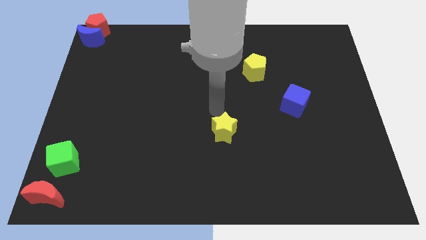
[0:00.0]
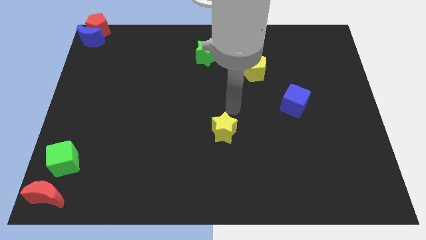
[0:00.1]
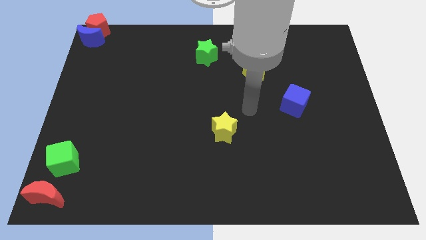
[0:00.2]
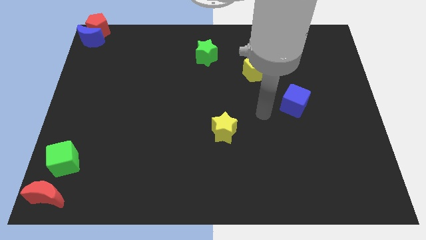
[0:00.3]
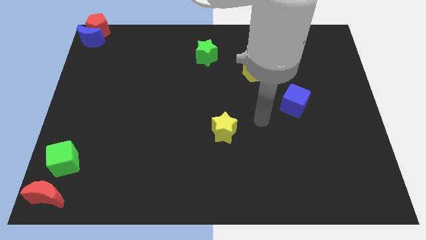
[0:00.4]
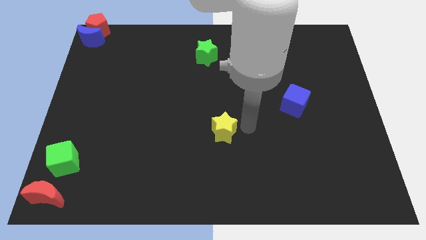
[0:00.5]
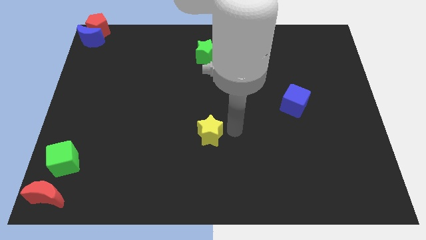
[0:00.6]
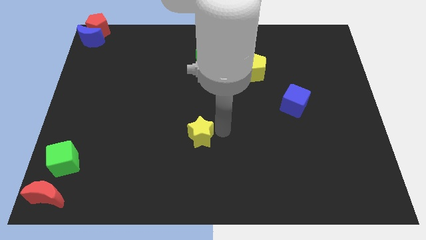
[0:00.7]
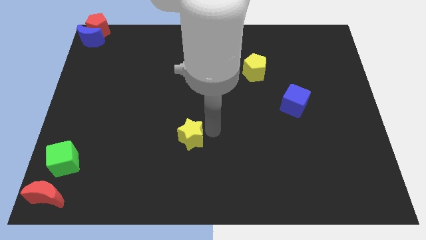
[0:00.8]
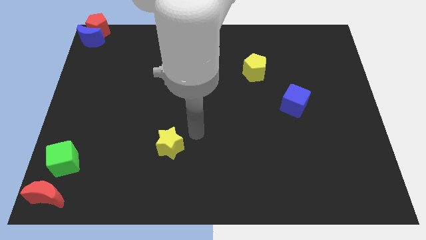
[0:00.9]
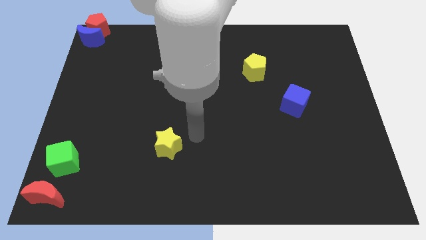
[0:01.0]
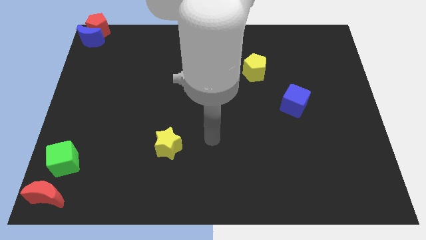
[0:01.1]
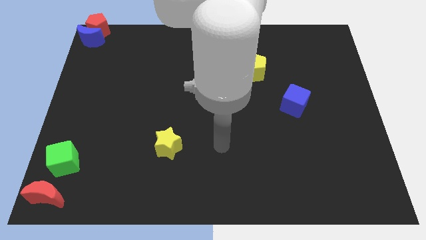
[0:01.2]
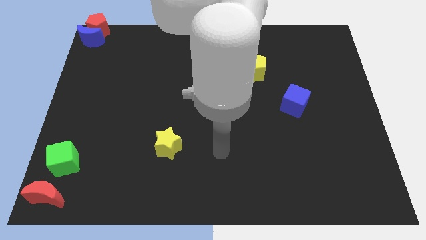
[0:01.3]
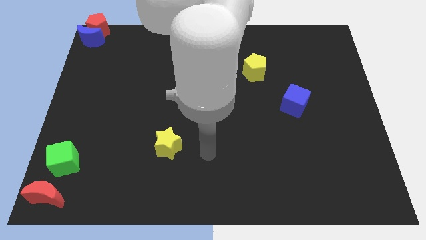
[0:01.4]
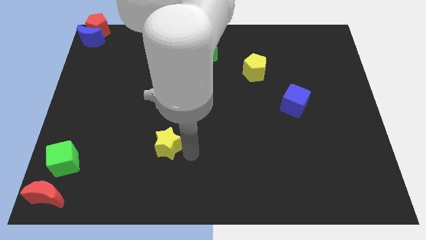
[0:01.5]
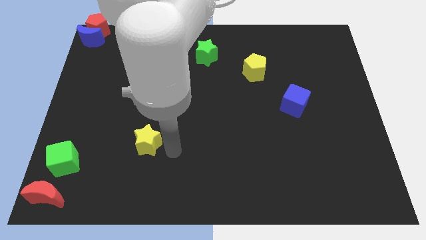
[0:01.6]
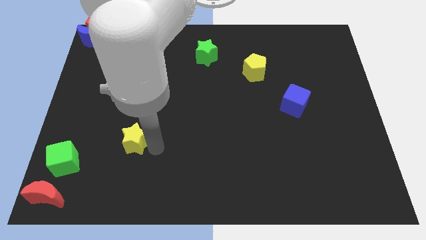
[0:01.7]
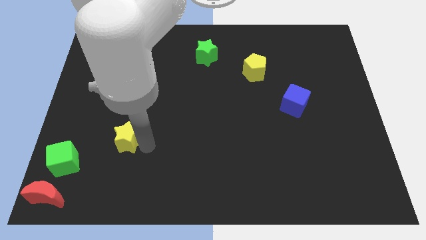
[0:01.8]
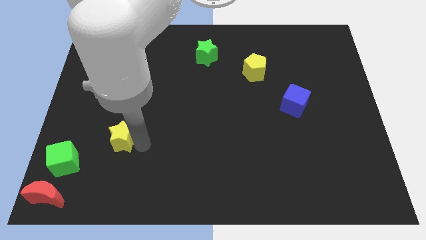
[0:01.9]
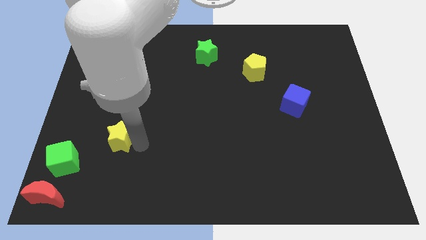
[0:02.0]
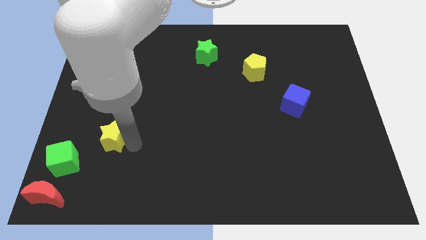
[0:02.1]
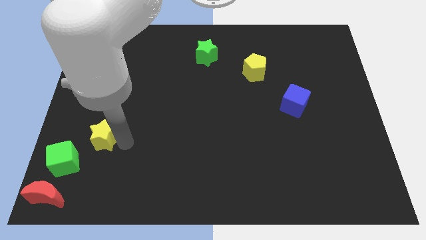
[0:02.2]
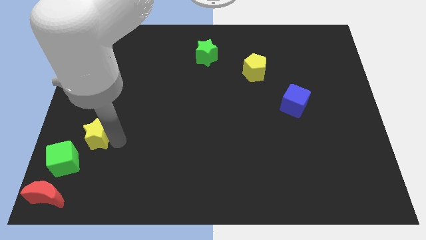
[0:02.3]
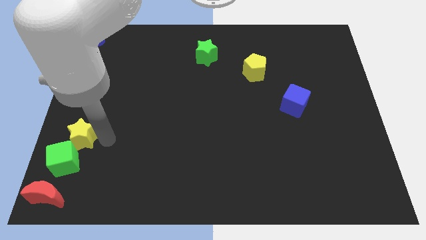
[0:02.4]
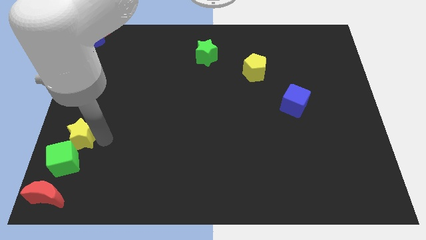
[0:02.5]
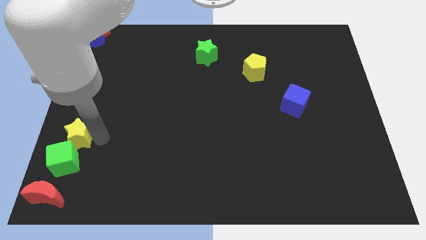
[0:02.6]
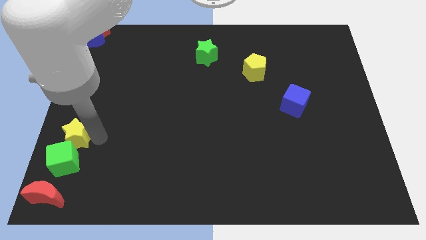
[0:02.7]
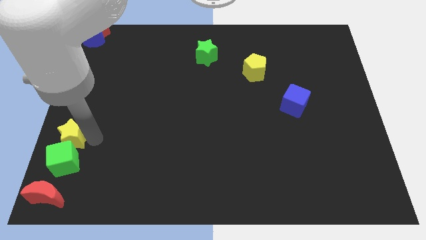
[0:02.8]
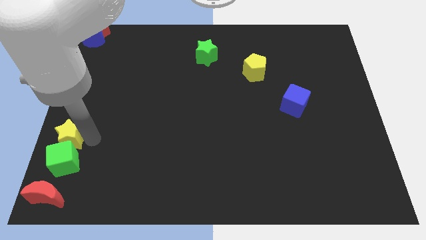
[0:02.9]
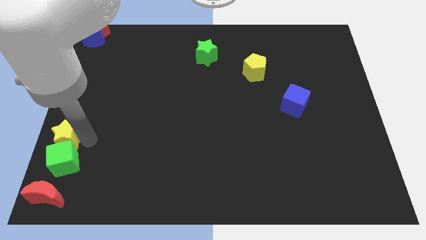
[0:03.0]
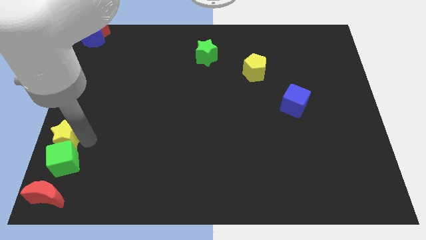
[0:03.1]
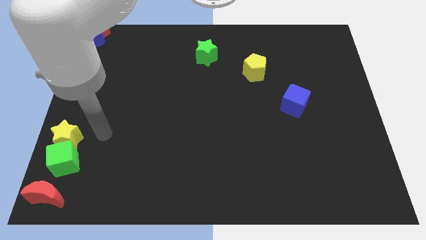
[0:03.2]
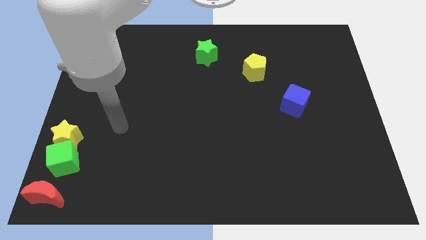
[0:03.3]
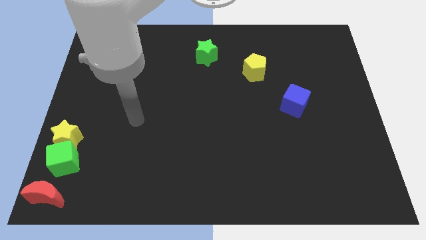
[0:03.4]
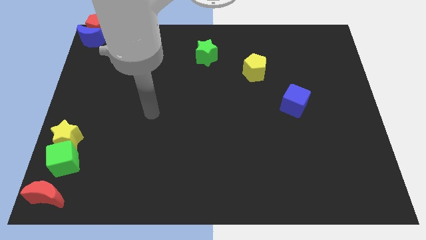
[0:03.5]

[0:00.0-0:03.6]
push the yellow star close to the green cube

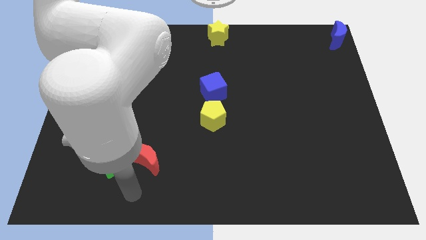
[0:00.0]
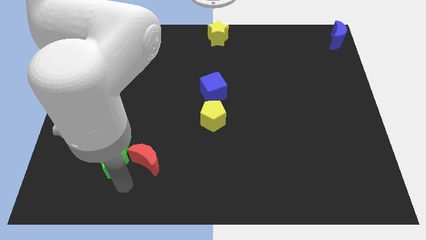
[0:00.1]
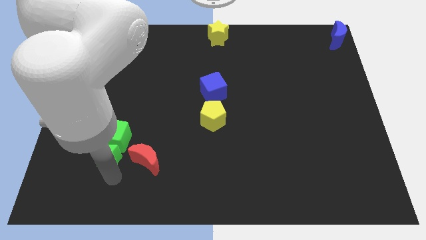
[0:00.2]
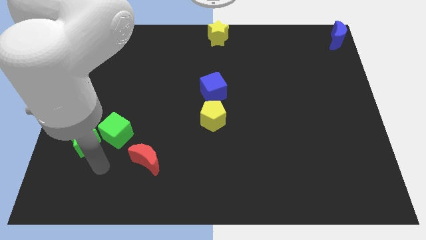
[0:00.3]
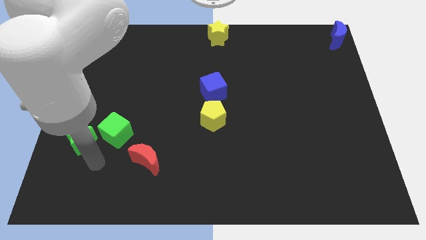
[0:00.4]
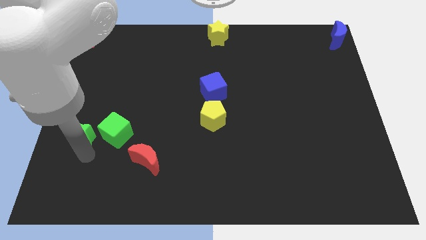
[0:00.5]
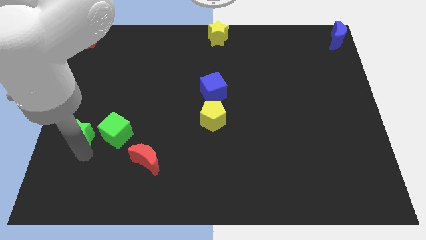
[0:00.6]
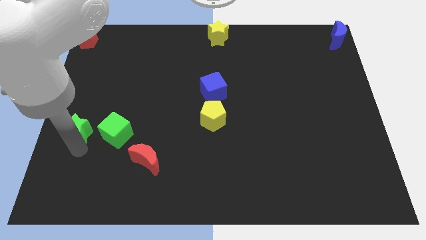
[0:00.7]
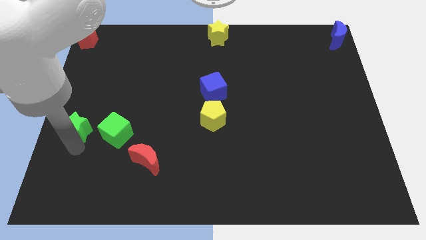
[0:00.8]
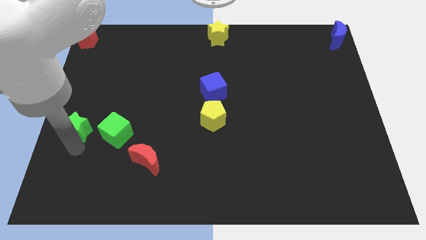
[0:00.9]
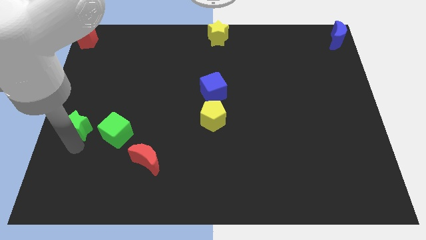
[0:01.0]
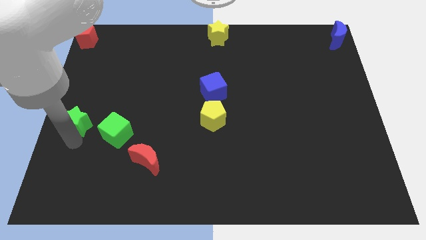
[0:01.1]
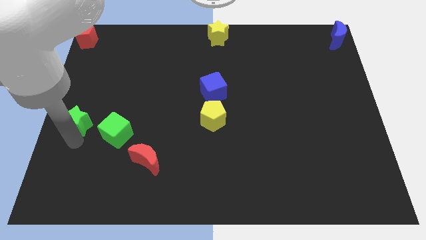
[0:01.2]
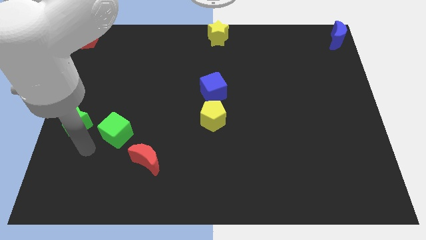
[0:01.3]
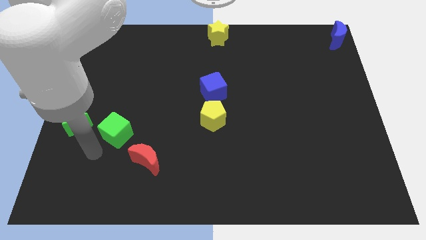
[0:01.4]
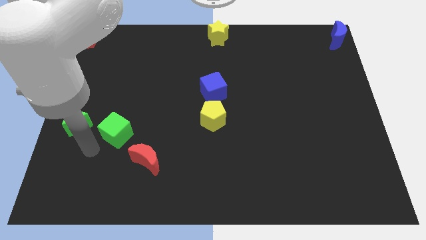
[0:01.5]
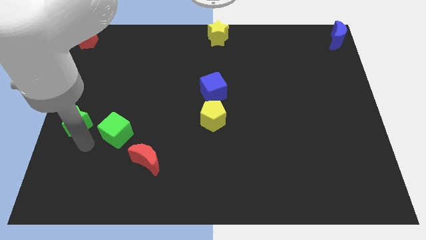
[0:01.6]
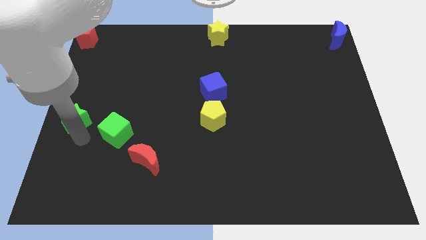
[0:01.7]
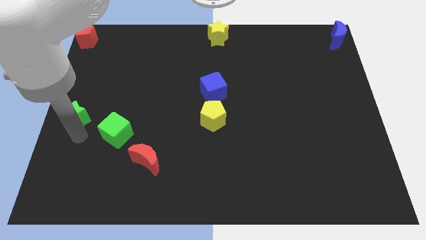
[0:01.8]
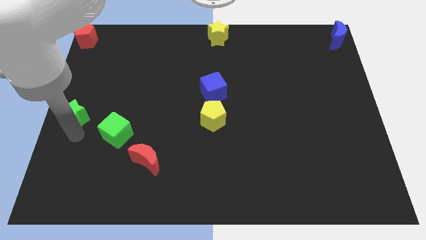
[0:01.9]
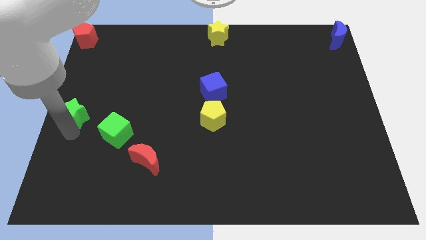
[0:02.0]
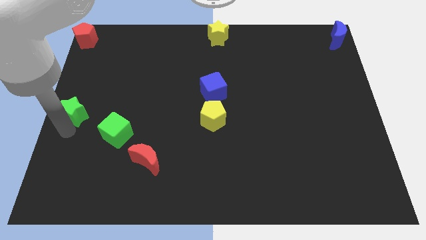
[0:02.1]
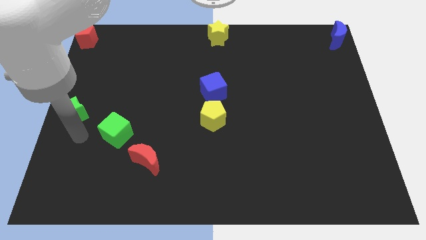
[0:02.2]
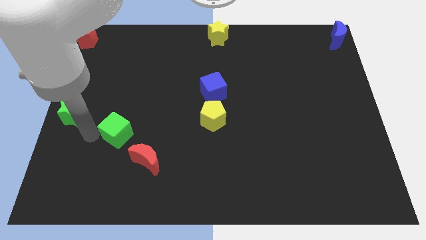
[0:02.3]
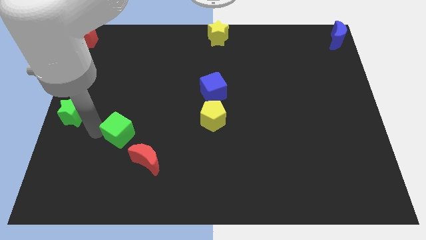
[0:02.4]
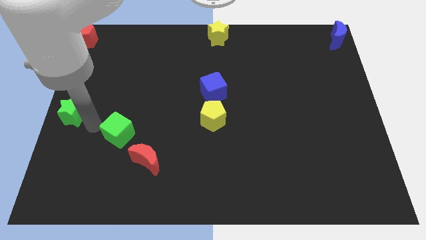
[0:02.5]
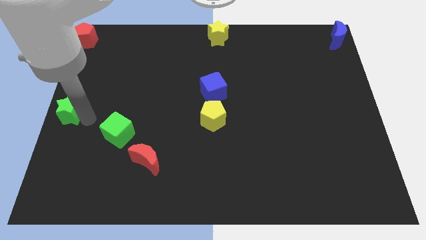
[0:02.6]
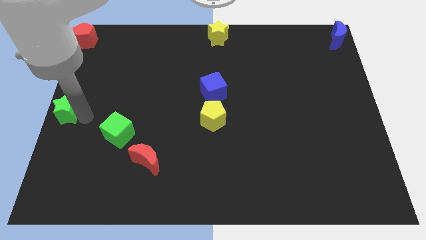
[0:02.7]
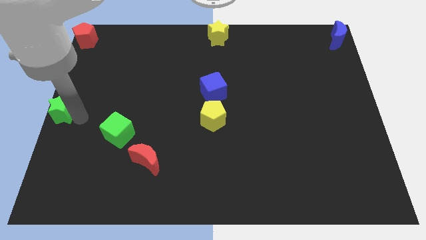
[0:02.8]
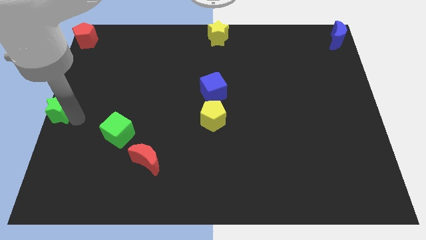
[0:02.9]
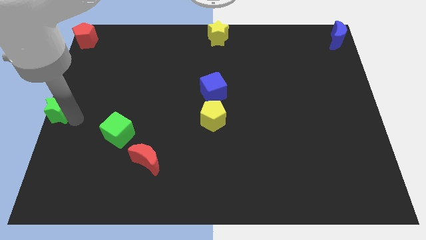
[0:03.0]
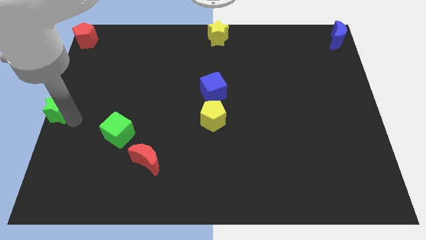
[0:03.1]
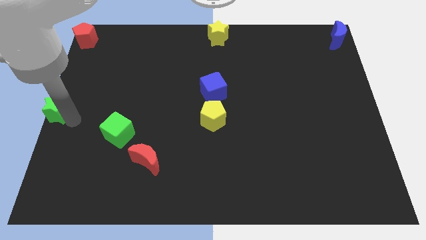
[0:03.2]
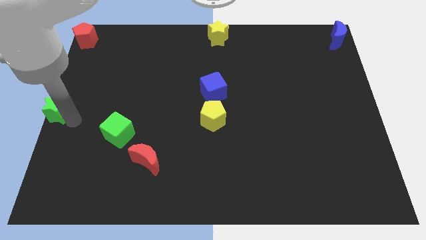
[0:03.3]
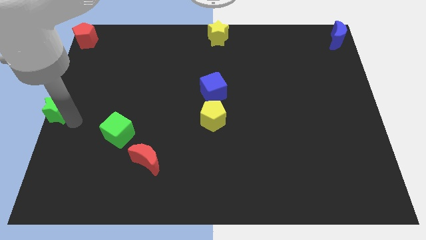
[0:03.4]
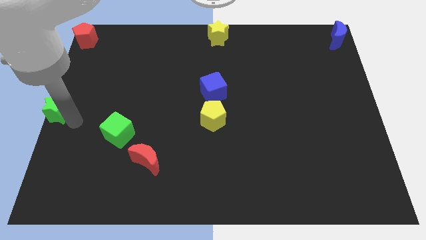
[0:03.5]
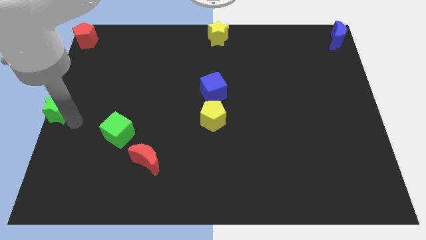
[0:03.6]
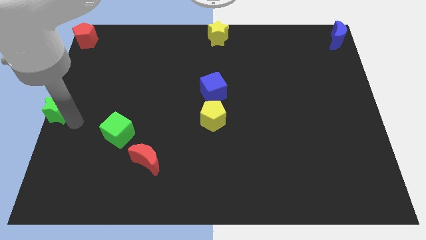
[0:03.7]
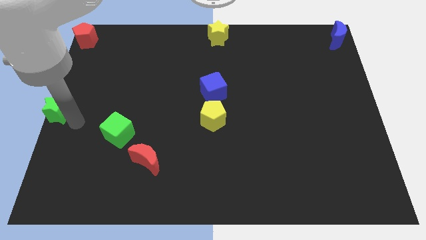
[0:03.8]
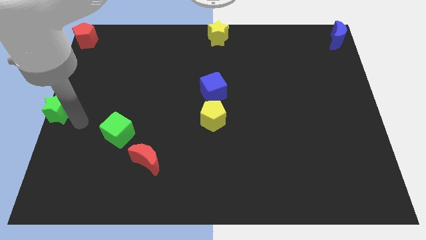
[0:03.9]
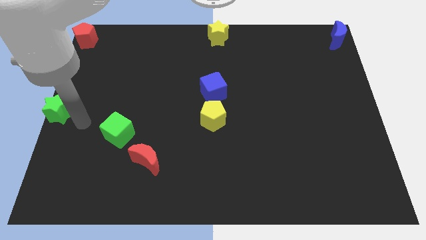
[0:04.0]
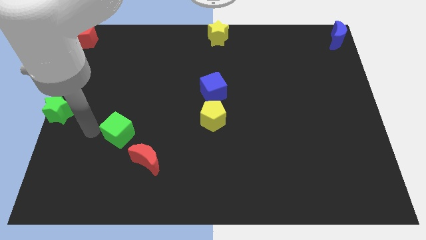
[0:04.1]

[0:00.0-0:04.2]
move the green star to the left center of the board

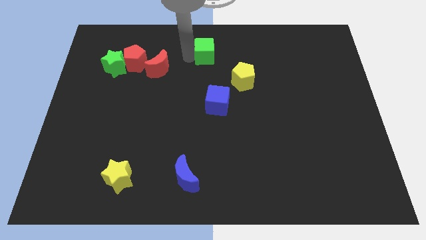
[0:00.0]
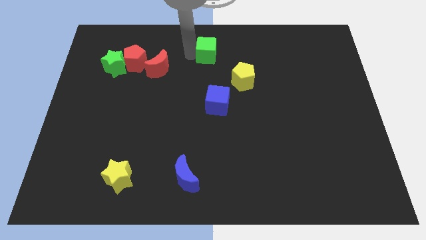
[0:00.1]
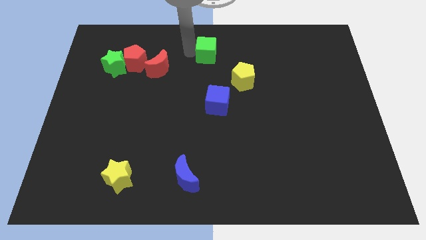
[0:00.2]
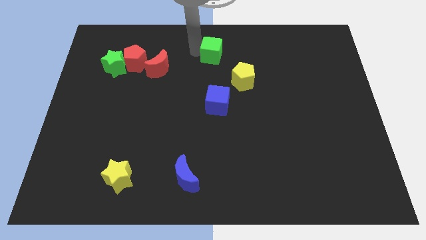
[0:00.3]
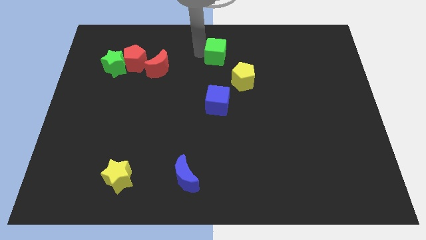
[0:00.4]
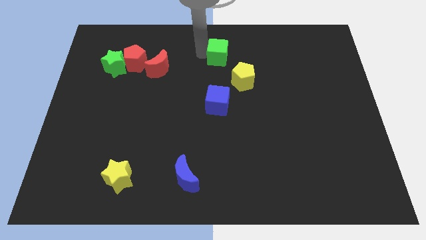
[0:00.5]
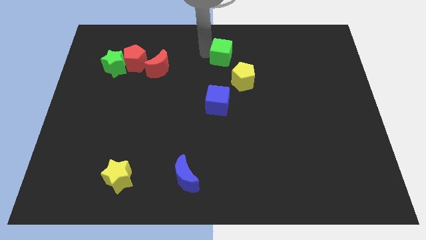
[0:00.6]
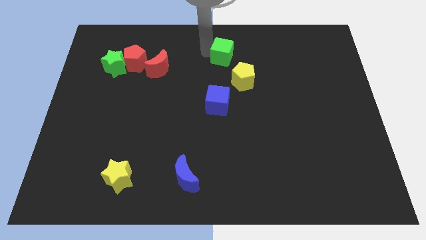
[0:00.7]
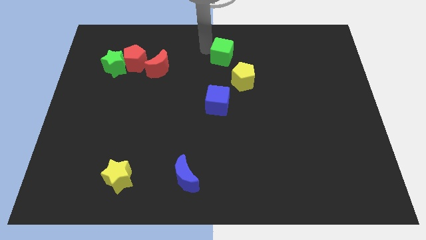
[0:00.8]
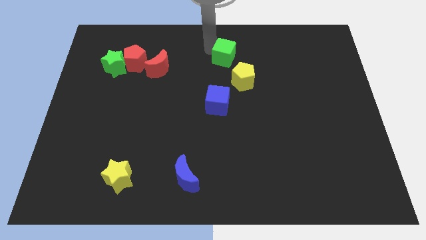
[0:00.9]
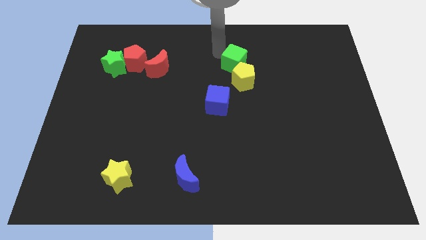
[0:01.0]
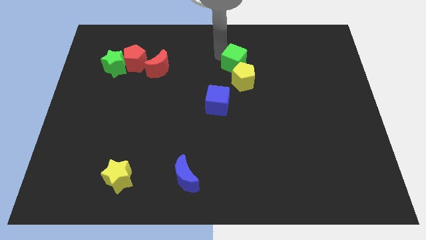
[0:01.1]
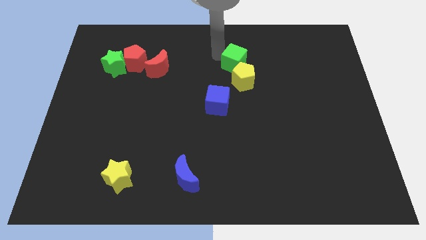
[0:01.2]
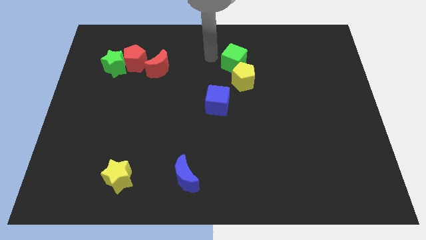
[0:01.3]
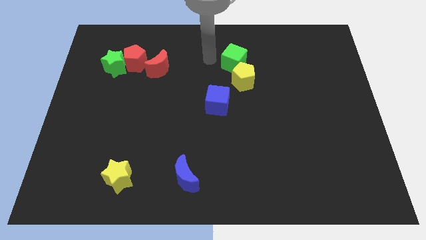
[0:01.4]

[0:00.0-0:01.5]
place green cube into the yellow pentagon
